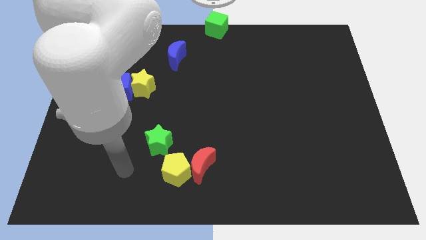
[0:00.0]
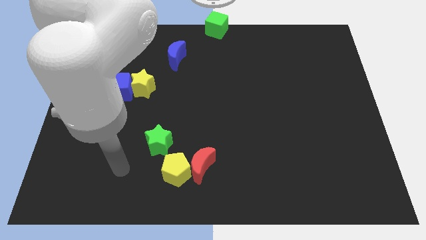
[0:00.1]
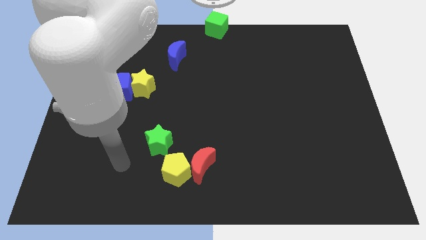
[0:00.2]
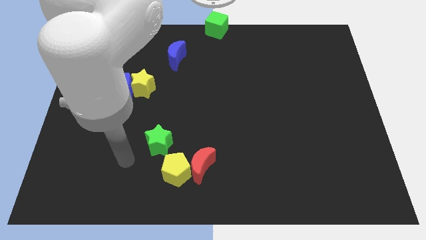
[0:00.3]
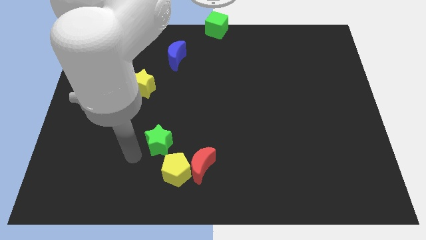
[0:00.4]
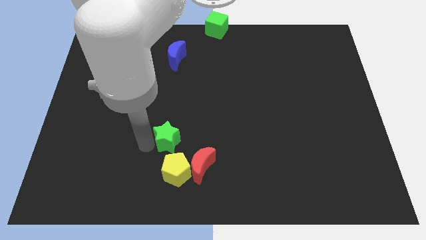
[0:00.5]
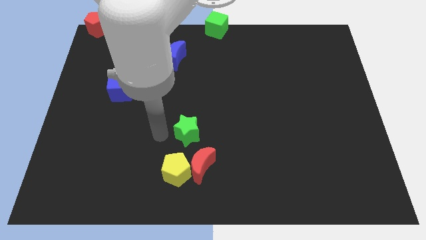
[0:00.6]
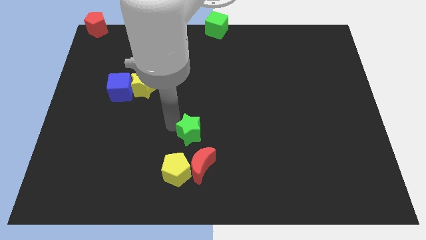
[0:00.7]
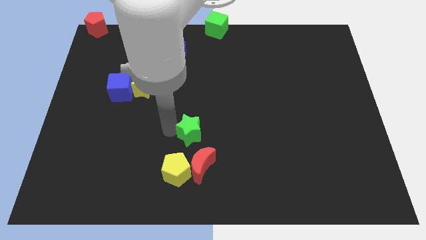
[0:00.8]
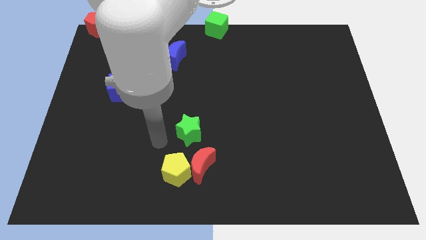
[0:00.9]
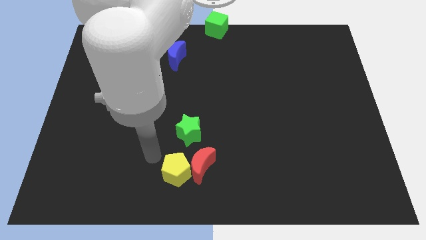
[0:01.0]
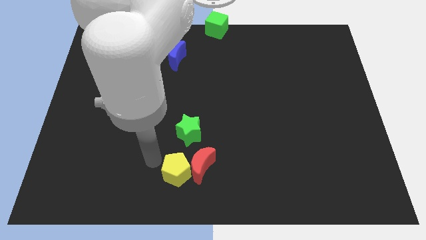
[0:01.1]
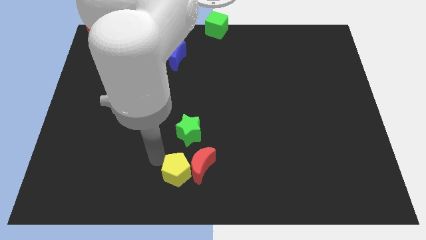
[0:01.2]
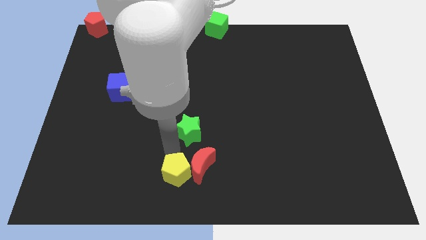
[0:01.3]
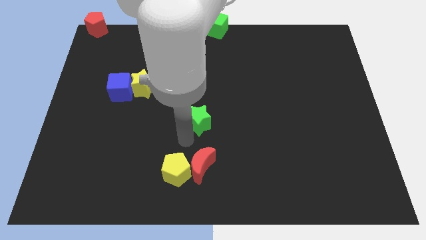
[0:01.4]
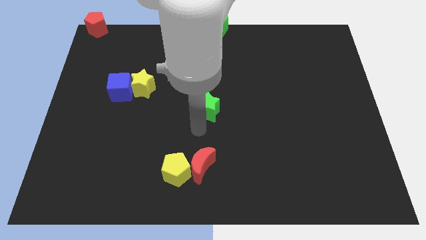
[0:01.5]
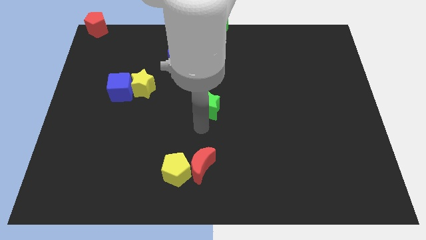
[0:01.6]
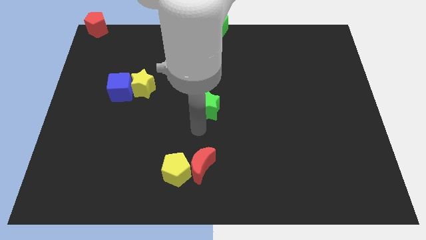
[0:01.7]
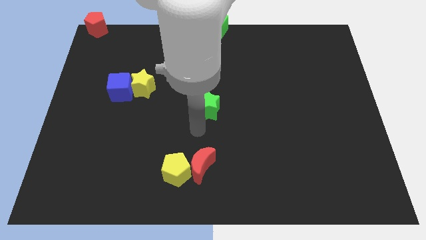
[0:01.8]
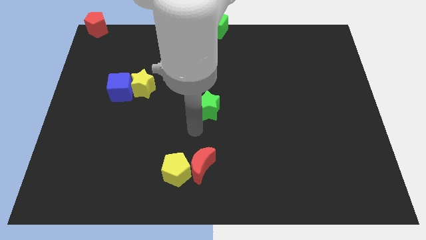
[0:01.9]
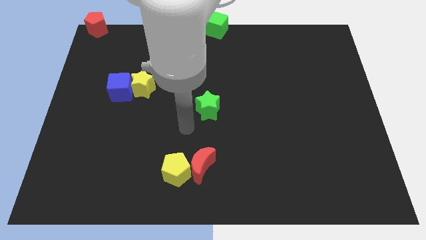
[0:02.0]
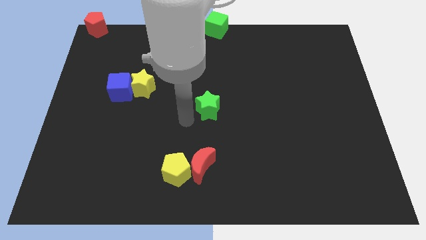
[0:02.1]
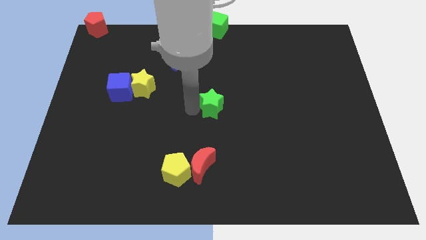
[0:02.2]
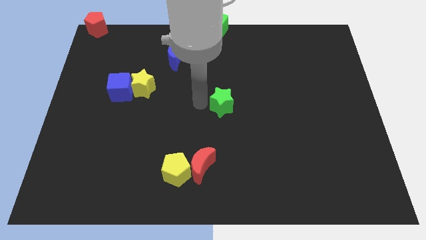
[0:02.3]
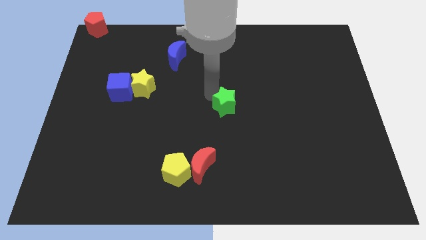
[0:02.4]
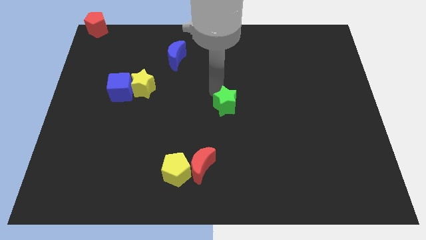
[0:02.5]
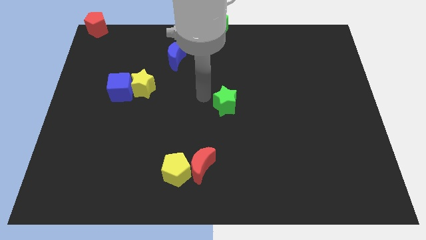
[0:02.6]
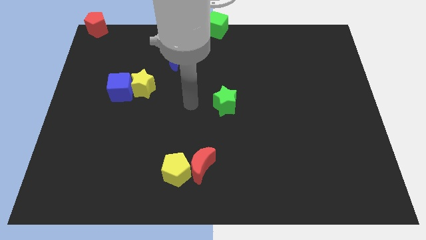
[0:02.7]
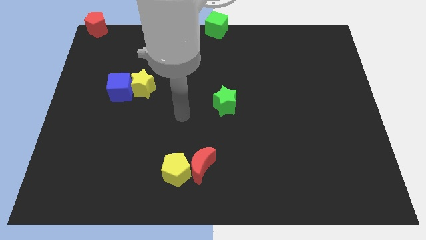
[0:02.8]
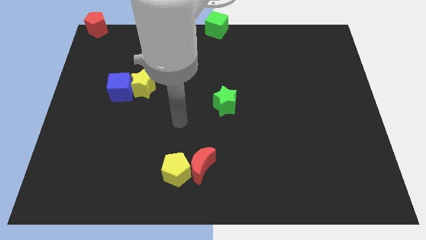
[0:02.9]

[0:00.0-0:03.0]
move the green star to the middle of the board

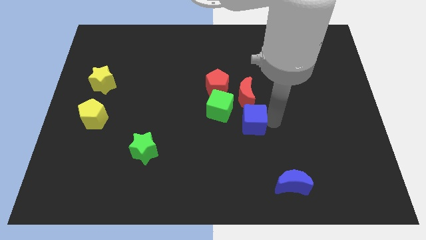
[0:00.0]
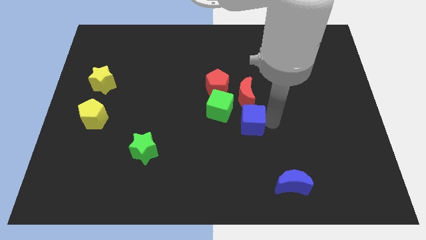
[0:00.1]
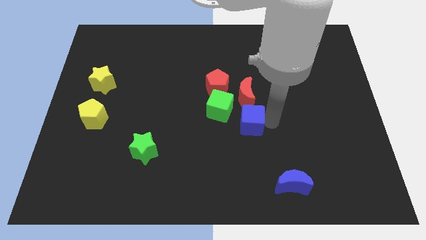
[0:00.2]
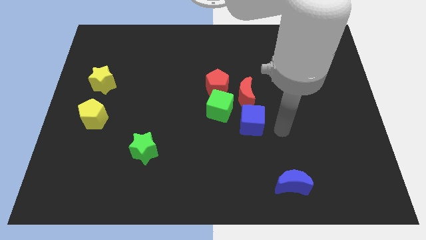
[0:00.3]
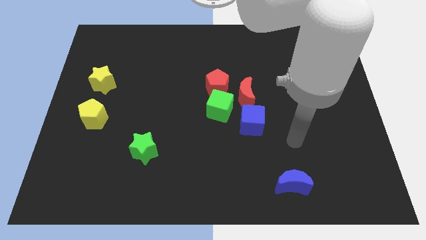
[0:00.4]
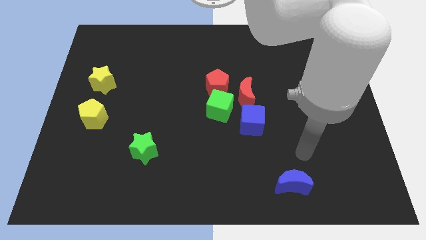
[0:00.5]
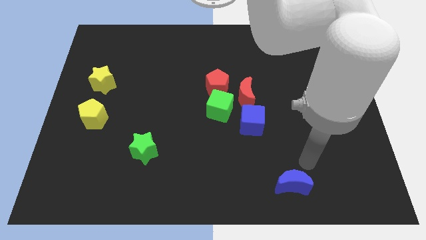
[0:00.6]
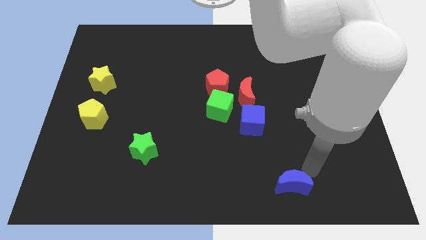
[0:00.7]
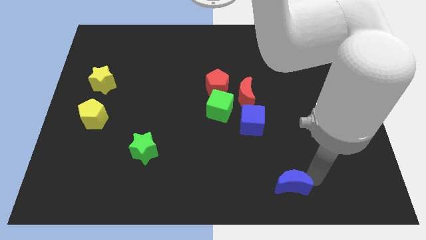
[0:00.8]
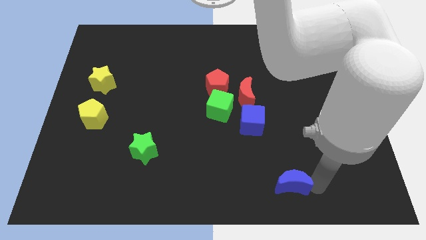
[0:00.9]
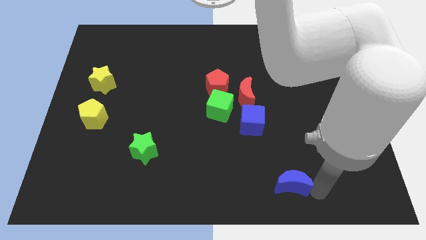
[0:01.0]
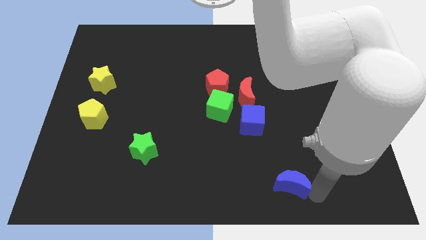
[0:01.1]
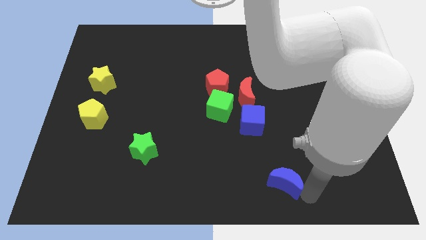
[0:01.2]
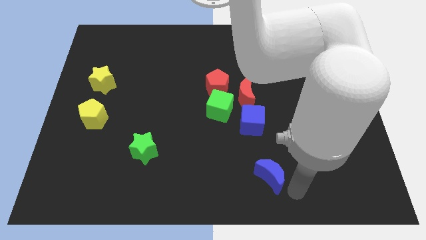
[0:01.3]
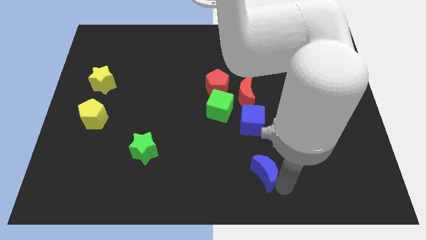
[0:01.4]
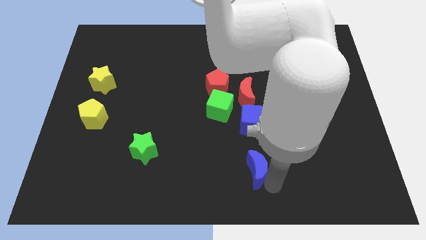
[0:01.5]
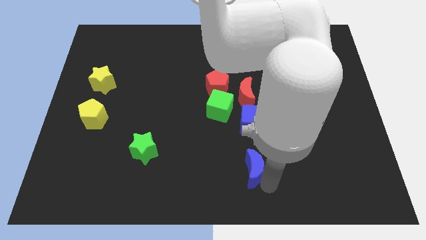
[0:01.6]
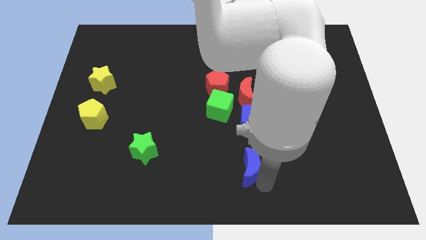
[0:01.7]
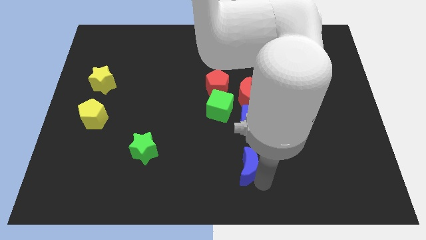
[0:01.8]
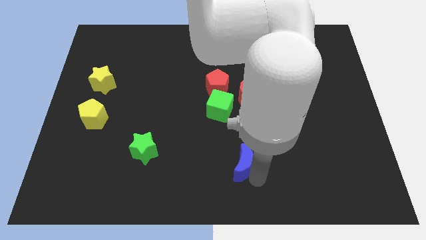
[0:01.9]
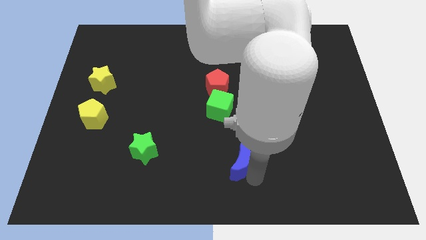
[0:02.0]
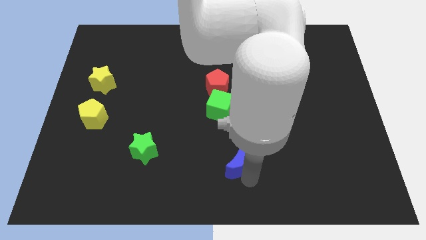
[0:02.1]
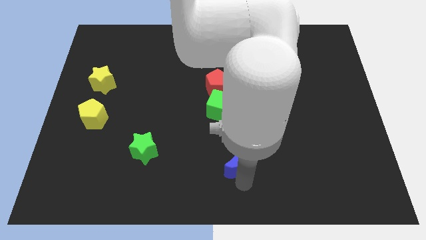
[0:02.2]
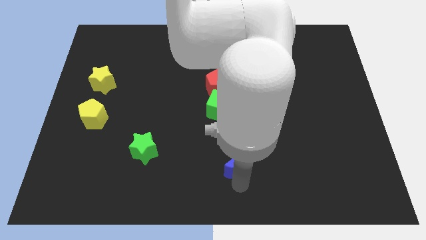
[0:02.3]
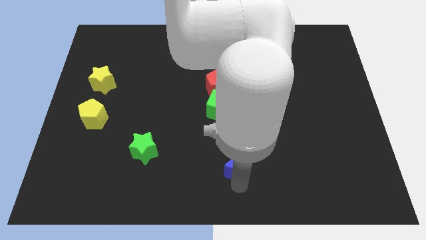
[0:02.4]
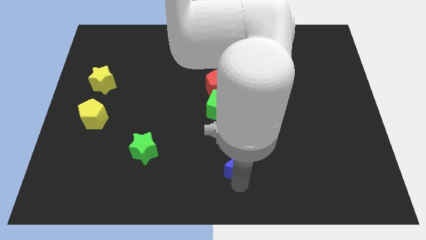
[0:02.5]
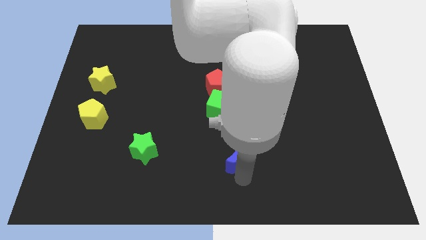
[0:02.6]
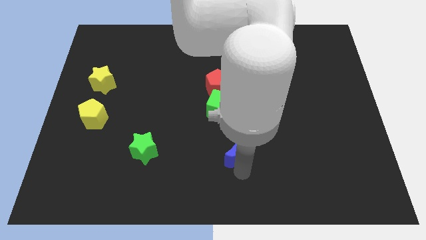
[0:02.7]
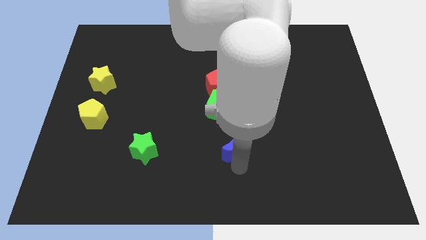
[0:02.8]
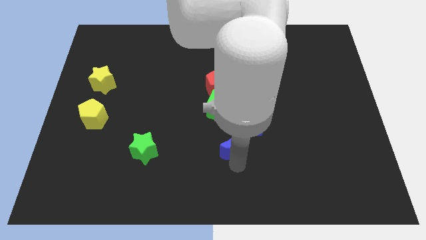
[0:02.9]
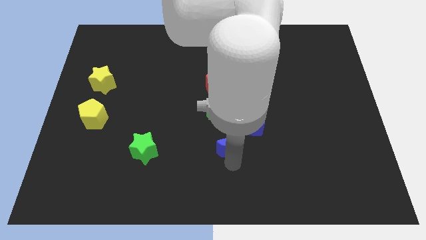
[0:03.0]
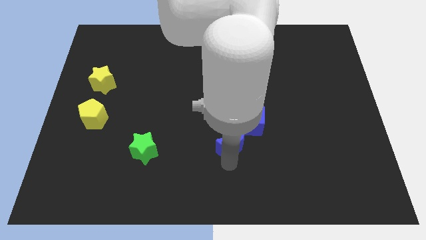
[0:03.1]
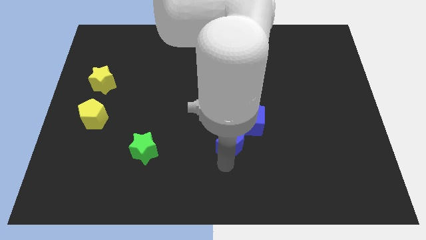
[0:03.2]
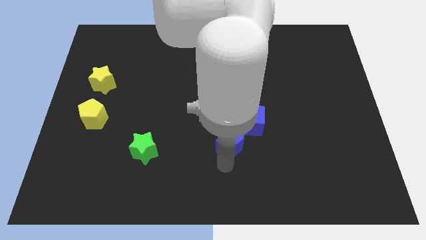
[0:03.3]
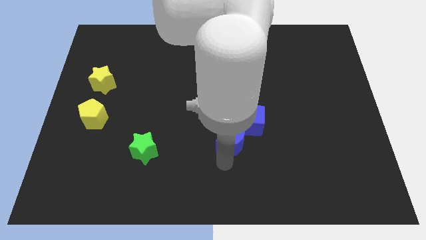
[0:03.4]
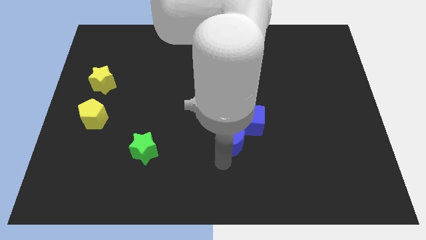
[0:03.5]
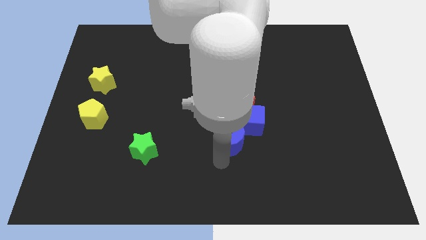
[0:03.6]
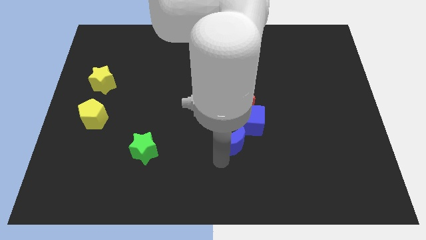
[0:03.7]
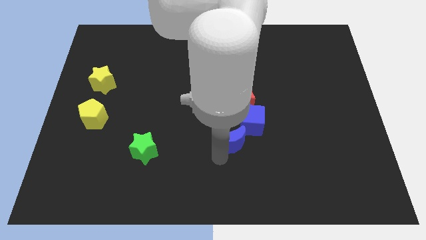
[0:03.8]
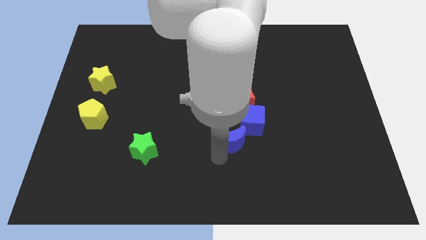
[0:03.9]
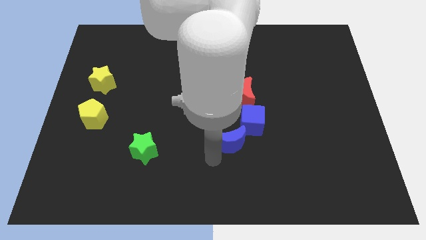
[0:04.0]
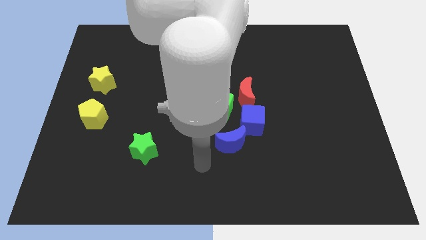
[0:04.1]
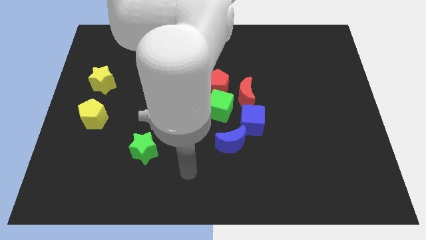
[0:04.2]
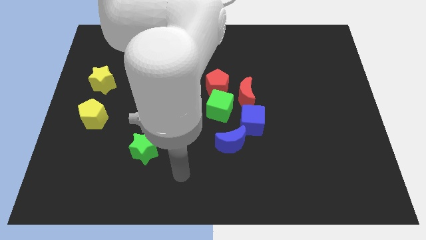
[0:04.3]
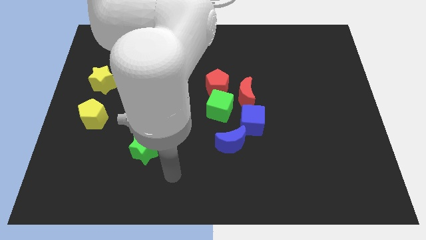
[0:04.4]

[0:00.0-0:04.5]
move the blue crescent to the bottom left of the blue cube

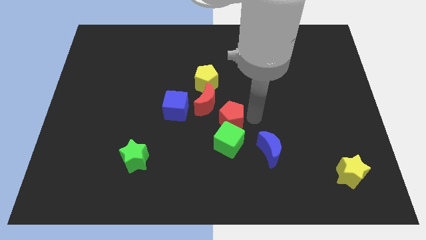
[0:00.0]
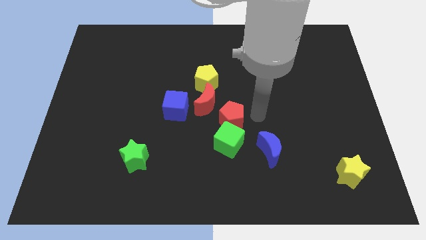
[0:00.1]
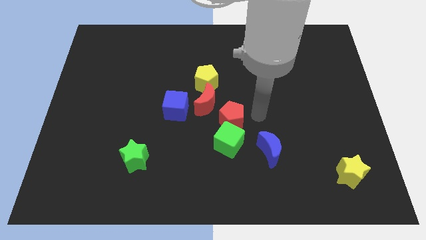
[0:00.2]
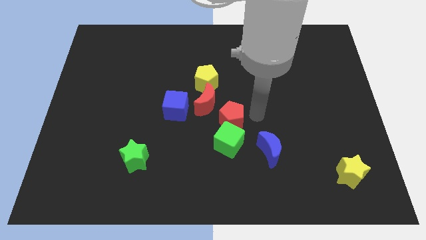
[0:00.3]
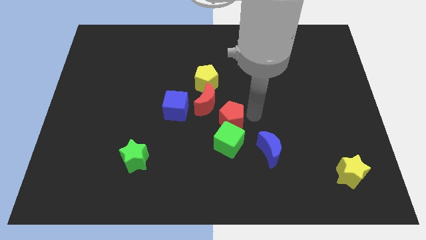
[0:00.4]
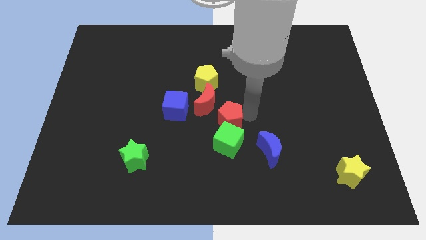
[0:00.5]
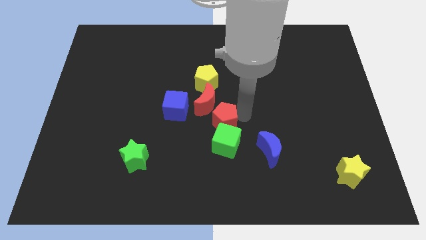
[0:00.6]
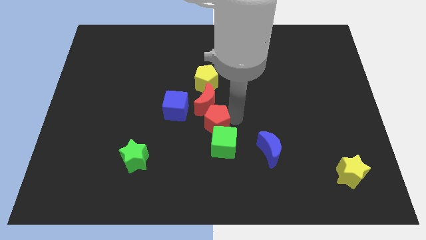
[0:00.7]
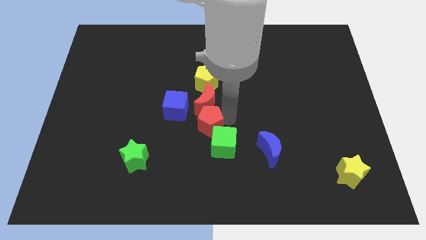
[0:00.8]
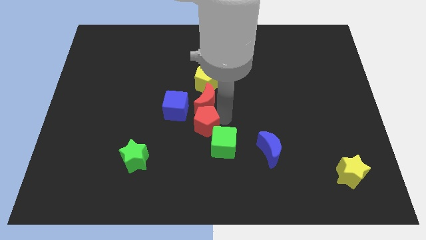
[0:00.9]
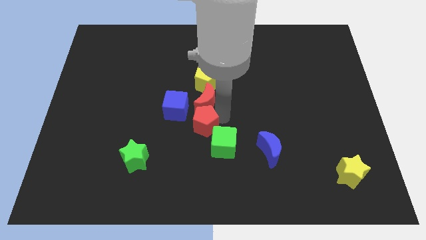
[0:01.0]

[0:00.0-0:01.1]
move red pentagon to the center

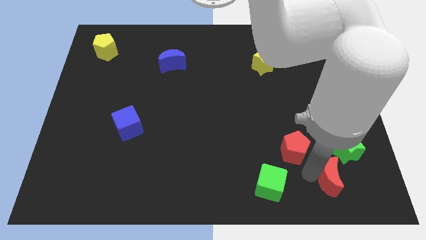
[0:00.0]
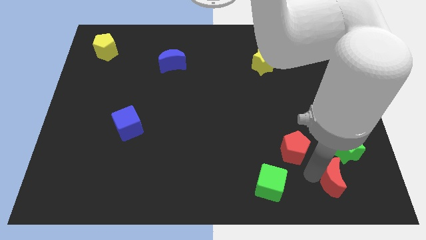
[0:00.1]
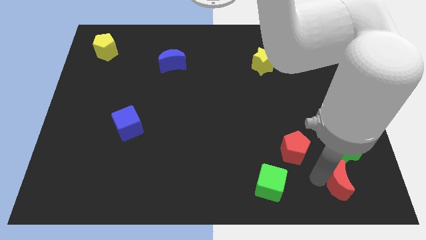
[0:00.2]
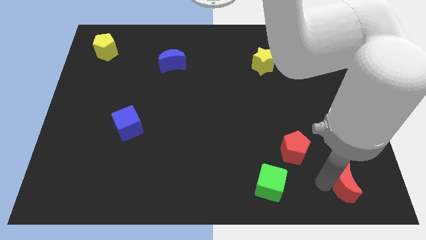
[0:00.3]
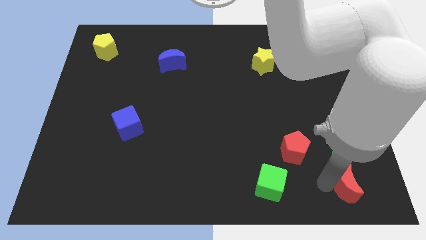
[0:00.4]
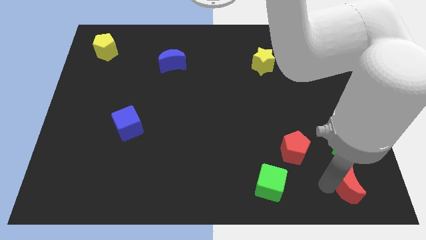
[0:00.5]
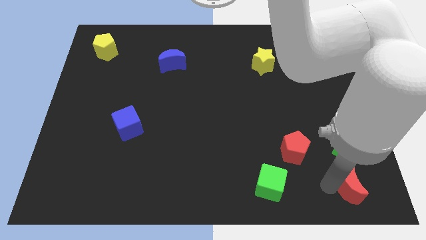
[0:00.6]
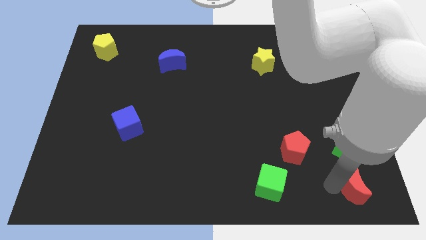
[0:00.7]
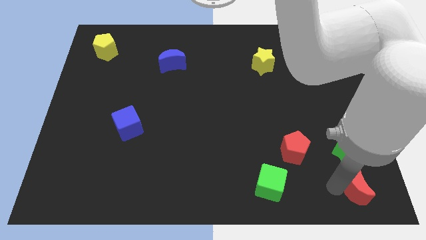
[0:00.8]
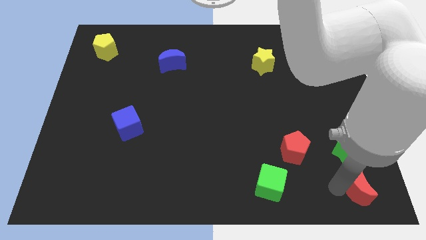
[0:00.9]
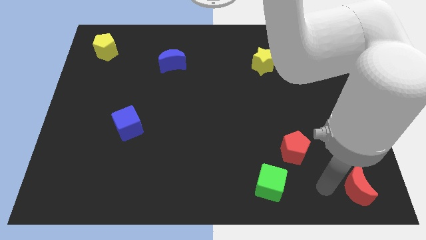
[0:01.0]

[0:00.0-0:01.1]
push red crescent to the bottom right corner
